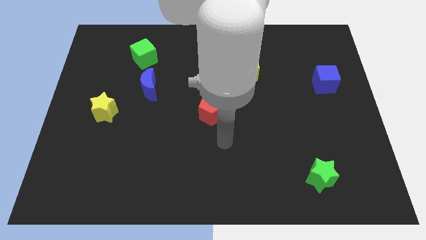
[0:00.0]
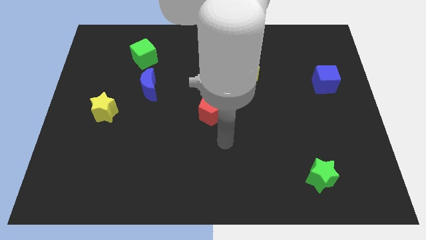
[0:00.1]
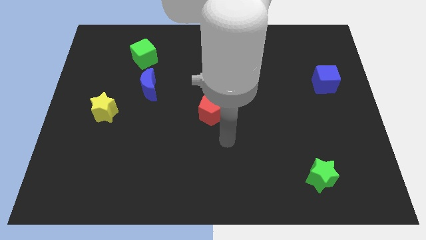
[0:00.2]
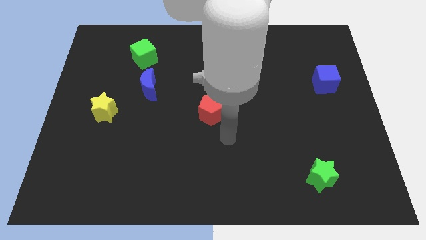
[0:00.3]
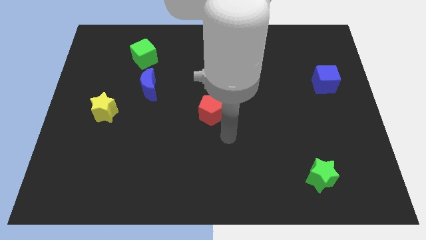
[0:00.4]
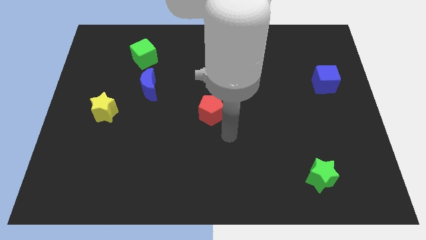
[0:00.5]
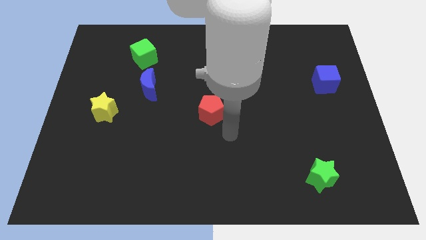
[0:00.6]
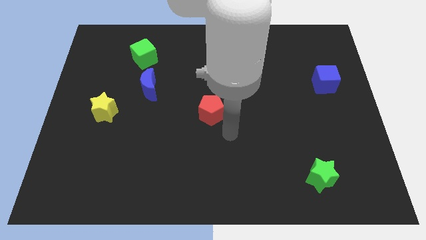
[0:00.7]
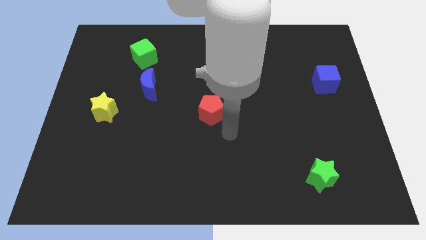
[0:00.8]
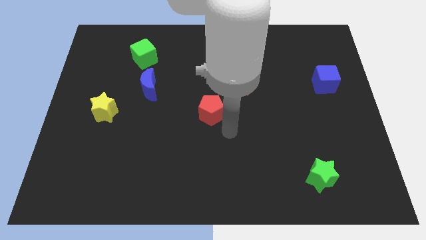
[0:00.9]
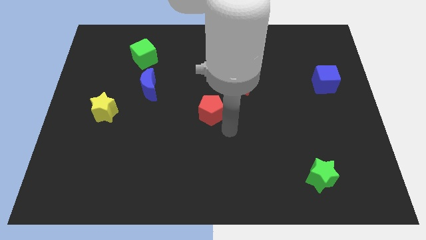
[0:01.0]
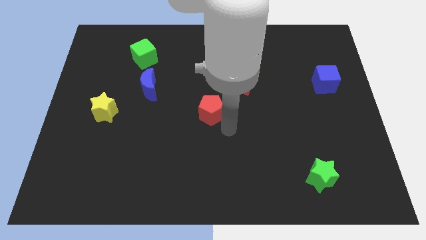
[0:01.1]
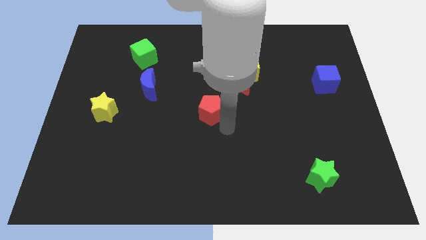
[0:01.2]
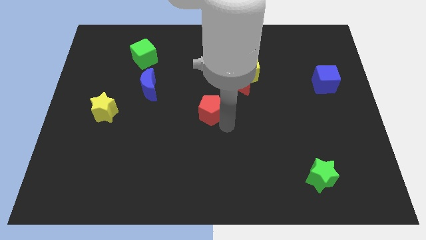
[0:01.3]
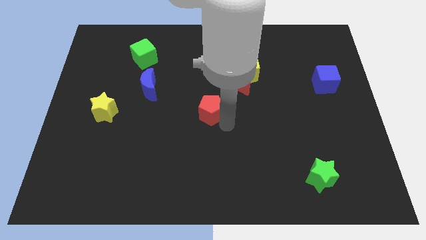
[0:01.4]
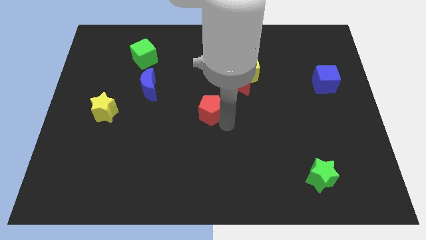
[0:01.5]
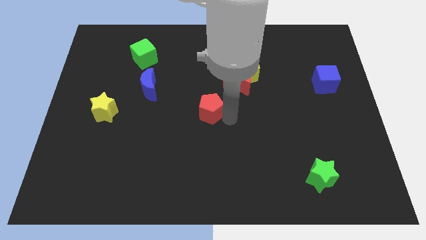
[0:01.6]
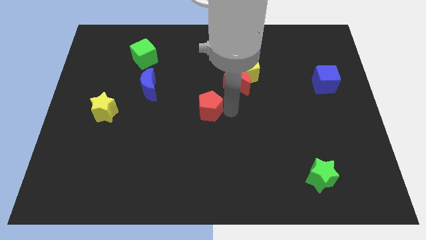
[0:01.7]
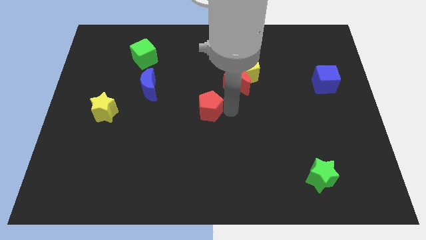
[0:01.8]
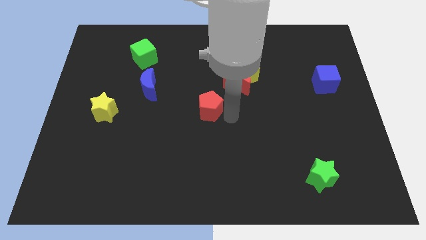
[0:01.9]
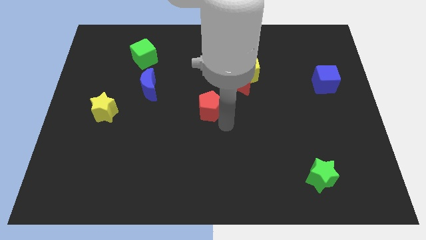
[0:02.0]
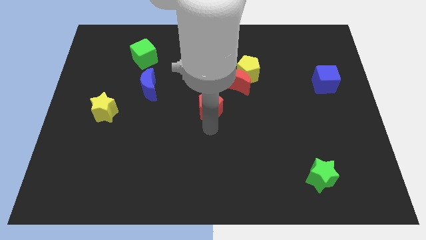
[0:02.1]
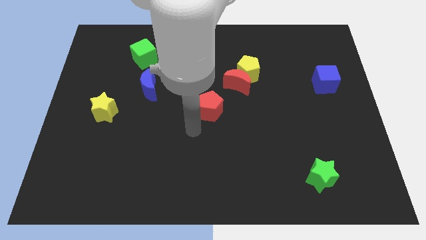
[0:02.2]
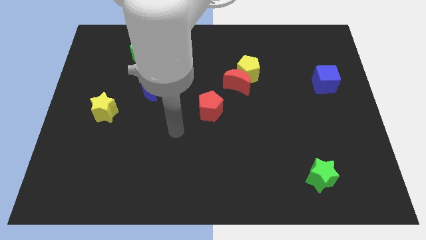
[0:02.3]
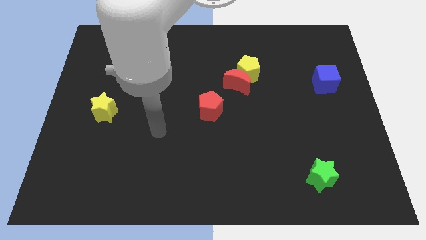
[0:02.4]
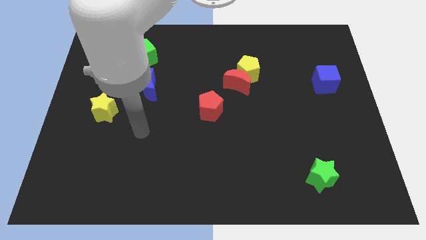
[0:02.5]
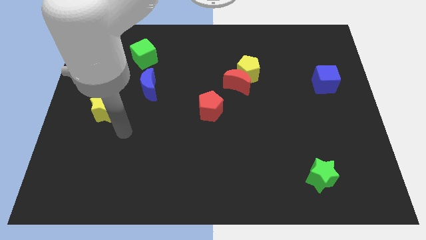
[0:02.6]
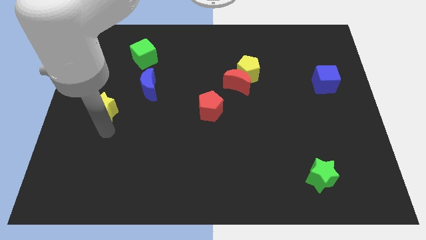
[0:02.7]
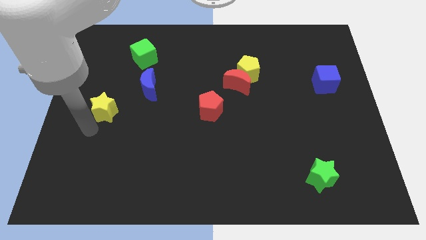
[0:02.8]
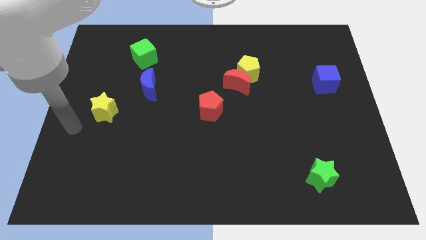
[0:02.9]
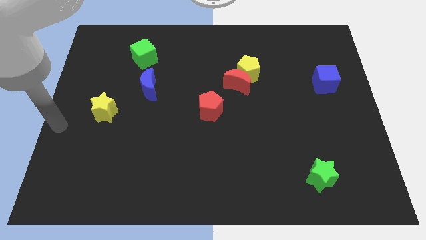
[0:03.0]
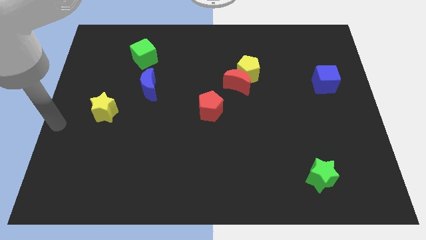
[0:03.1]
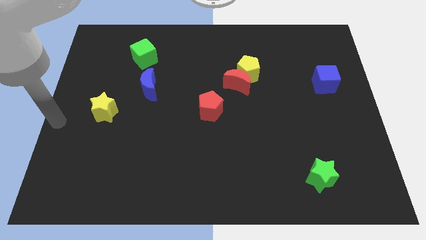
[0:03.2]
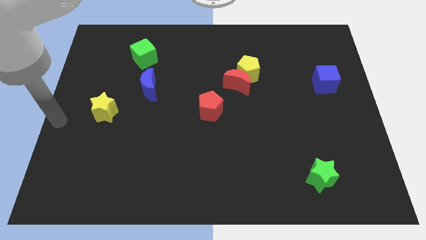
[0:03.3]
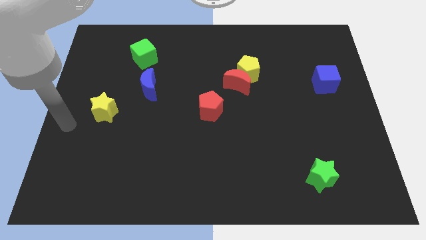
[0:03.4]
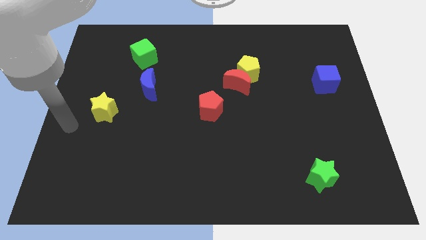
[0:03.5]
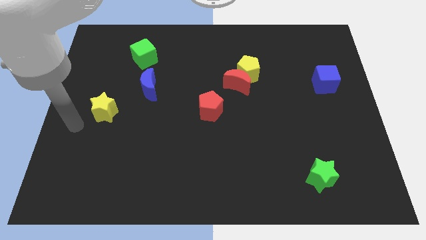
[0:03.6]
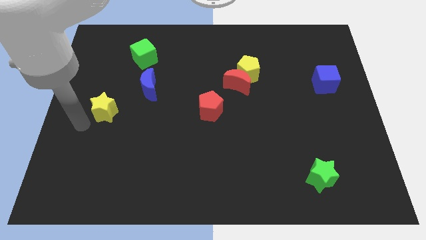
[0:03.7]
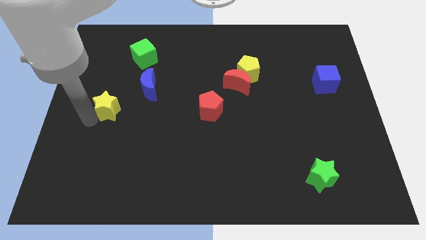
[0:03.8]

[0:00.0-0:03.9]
move the red pentagon diagonal to the right of the yellow star

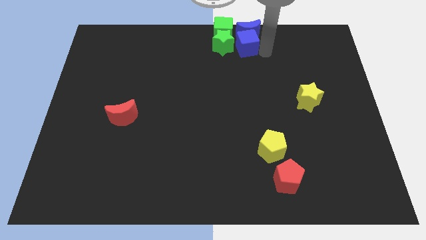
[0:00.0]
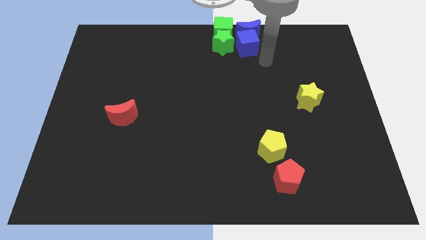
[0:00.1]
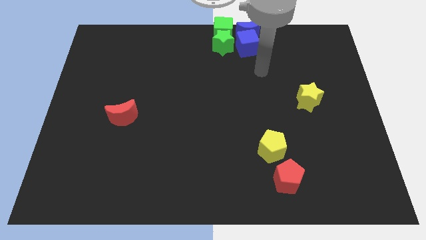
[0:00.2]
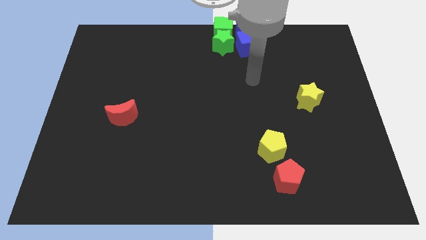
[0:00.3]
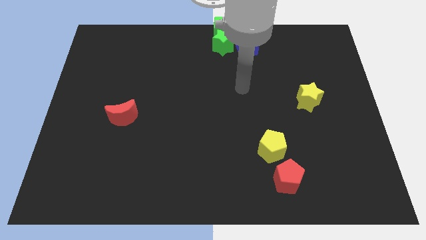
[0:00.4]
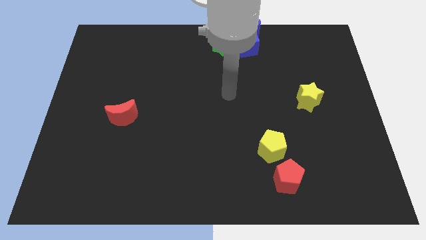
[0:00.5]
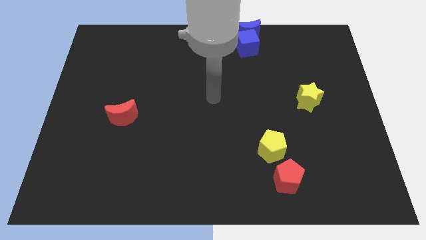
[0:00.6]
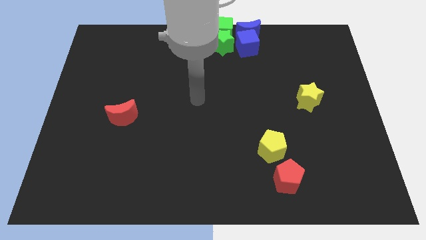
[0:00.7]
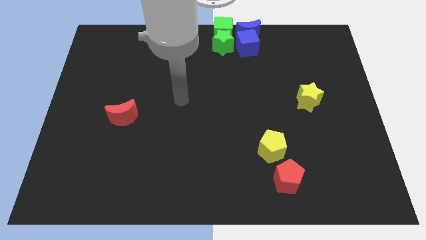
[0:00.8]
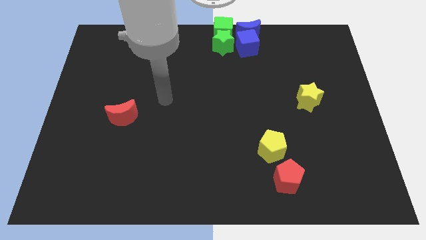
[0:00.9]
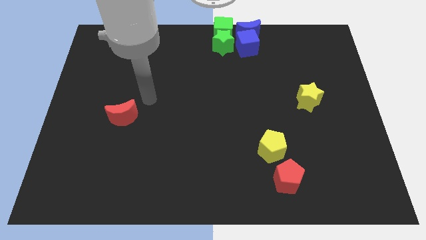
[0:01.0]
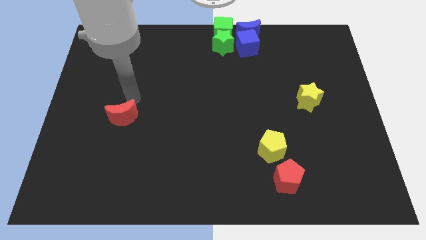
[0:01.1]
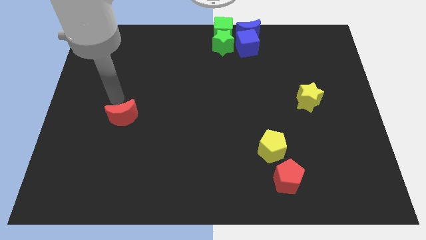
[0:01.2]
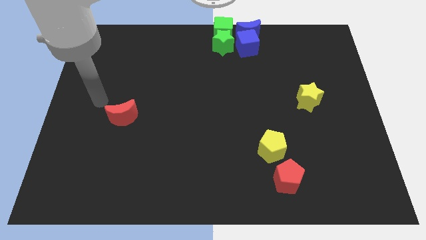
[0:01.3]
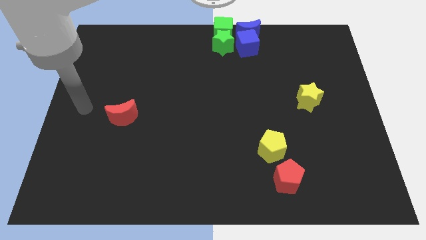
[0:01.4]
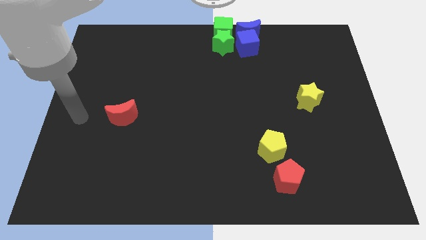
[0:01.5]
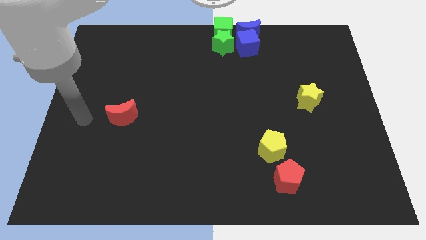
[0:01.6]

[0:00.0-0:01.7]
place your hand at the center left of the board

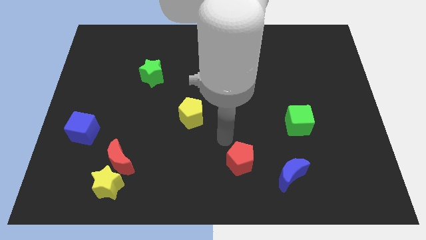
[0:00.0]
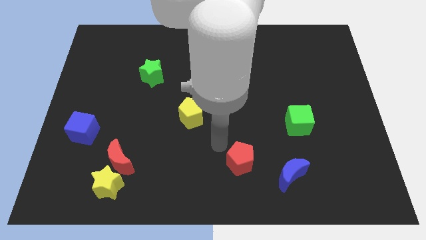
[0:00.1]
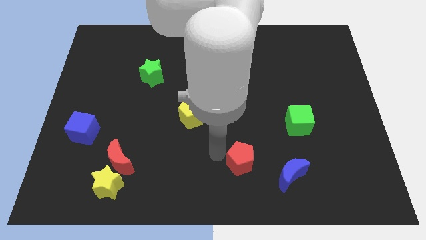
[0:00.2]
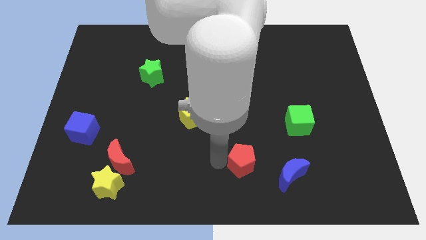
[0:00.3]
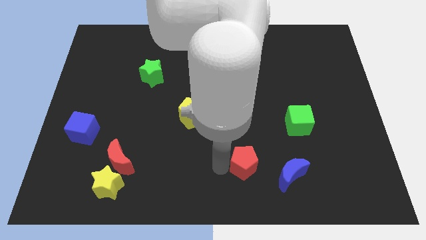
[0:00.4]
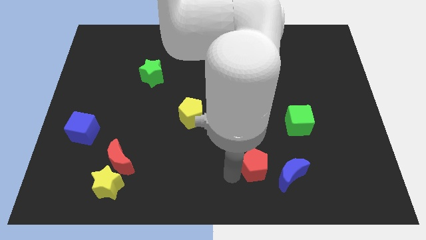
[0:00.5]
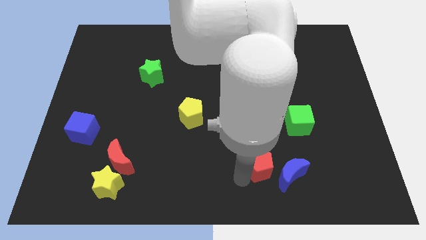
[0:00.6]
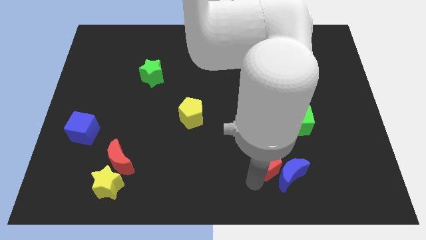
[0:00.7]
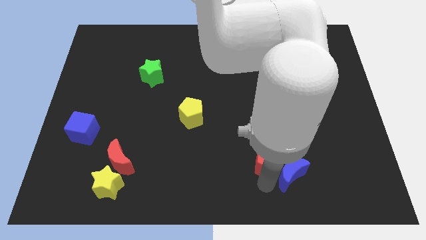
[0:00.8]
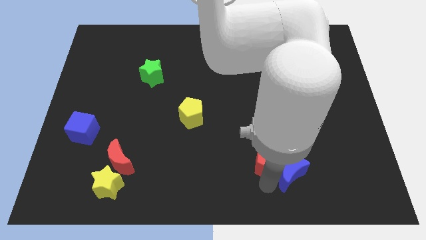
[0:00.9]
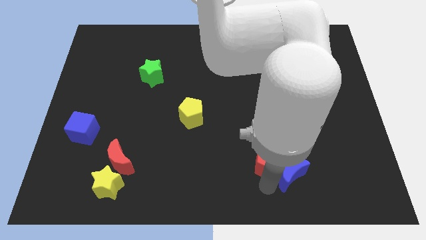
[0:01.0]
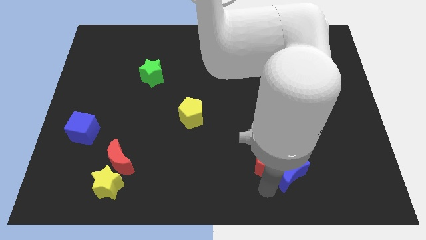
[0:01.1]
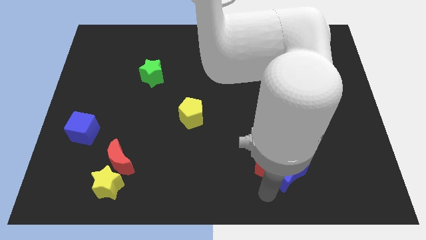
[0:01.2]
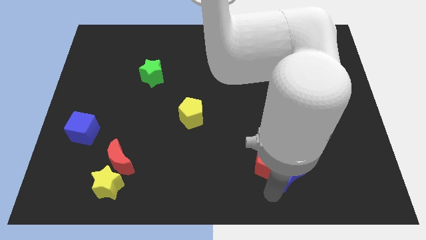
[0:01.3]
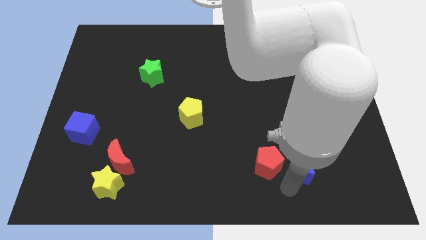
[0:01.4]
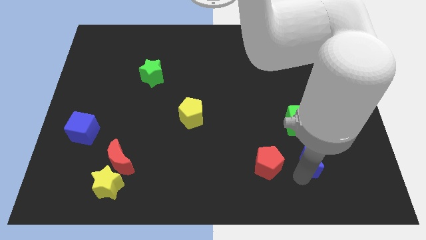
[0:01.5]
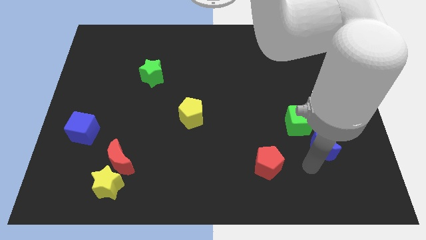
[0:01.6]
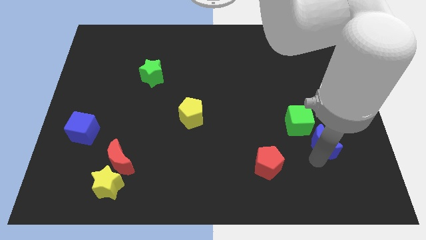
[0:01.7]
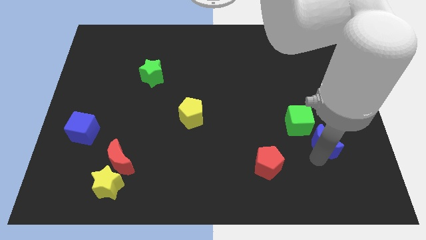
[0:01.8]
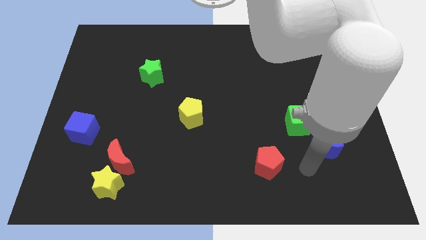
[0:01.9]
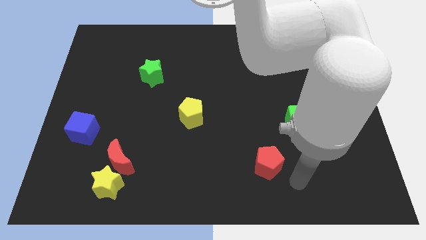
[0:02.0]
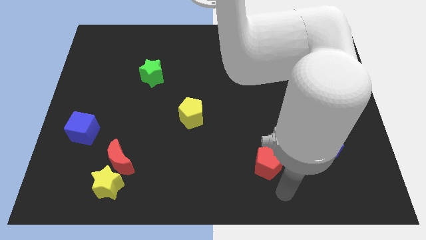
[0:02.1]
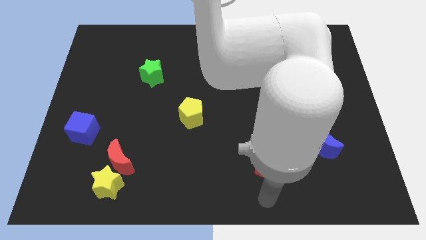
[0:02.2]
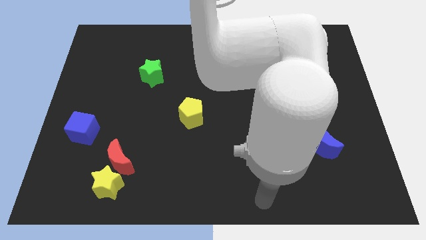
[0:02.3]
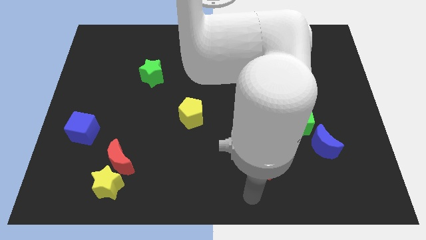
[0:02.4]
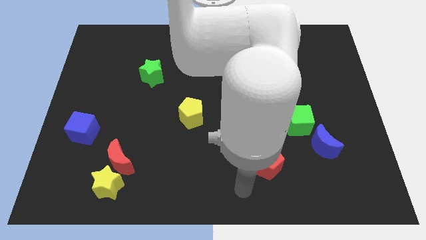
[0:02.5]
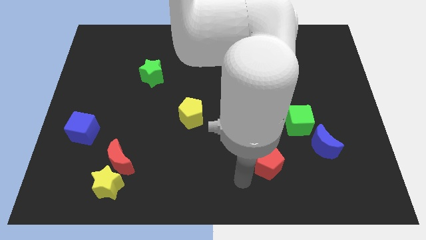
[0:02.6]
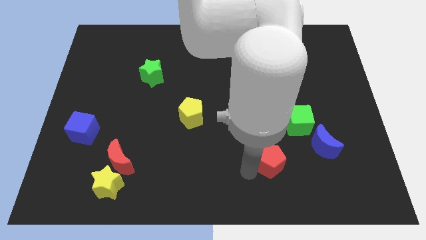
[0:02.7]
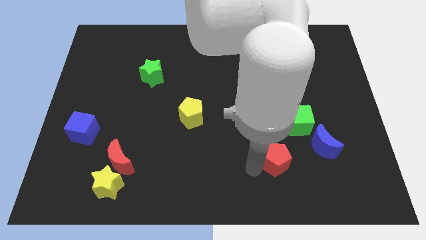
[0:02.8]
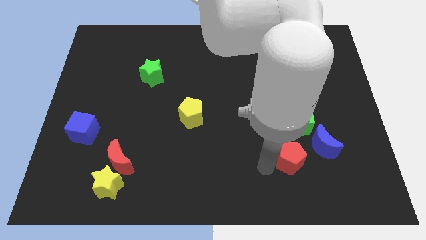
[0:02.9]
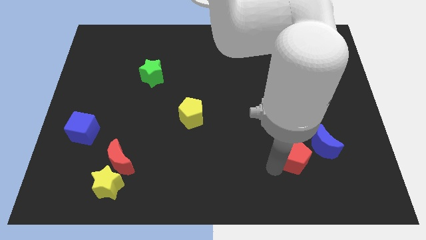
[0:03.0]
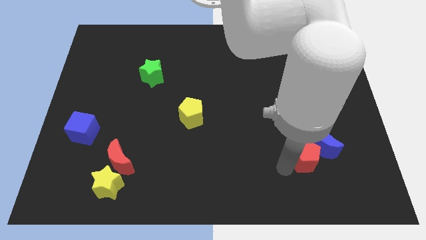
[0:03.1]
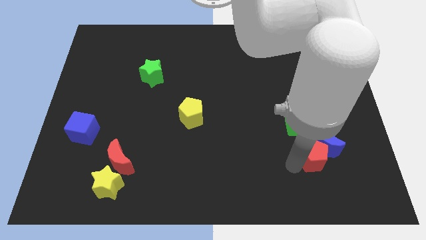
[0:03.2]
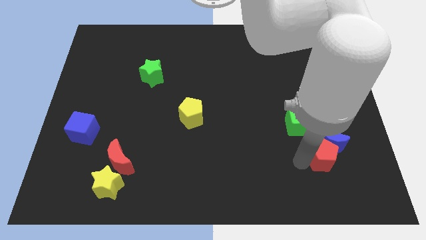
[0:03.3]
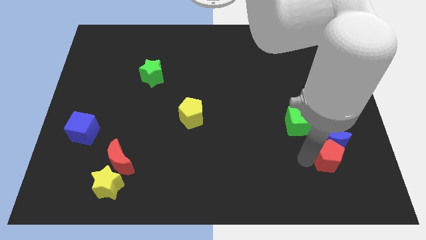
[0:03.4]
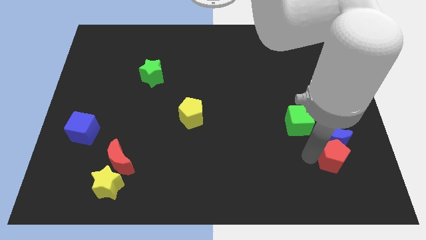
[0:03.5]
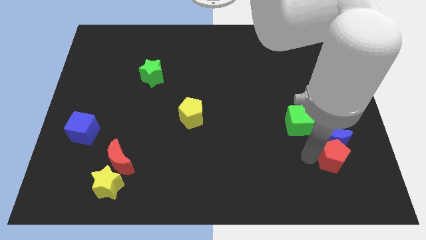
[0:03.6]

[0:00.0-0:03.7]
move the red pentagon and the blue moon towards the green cube
